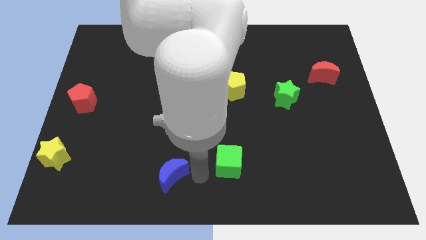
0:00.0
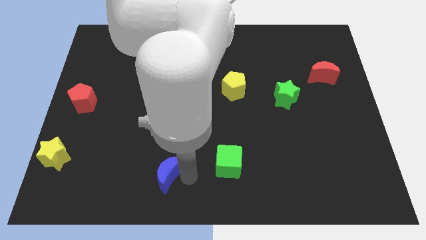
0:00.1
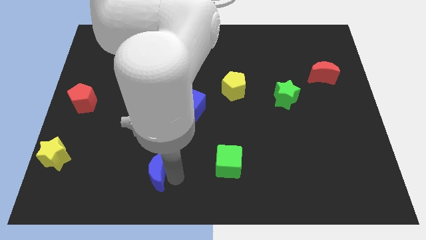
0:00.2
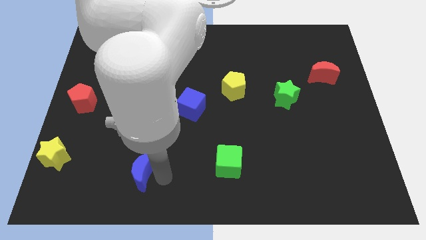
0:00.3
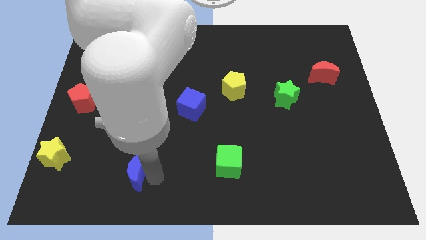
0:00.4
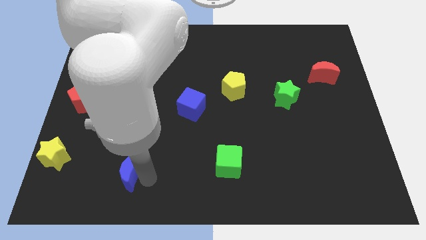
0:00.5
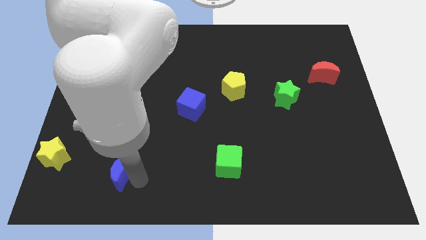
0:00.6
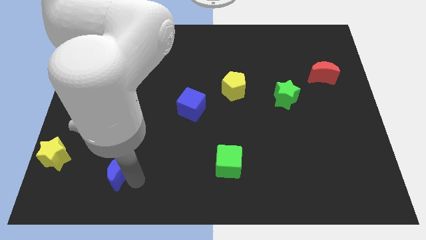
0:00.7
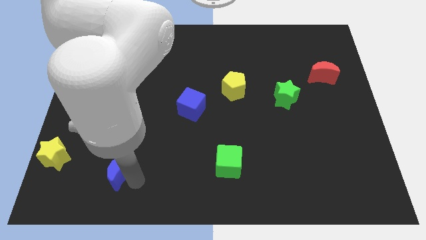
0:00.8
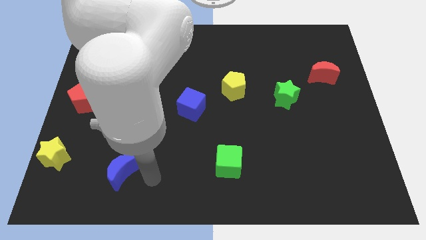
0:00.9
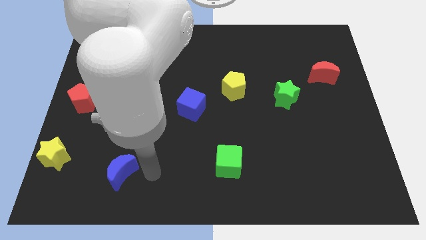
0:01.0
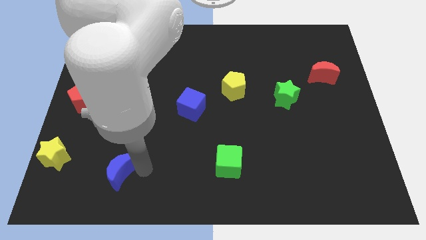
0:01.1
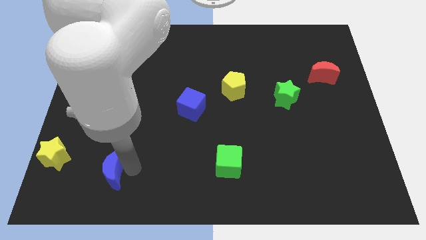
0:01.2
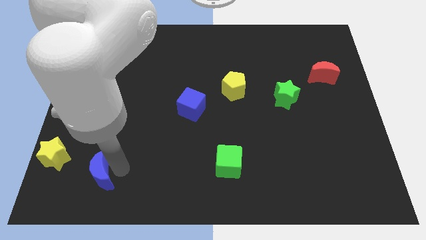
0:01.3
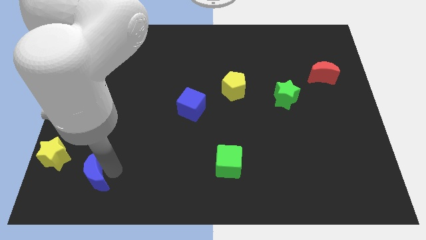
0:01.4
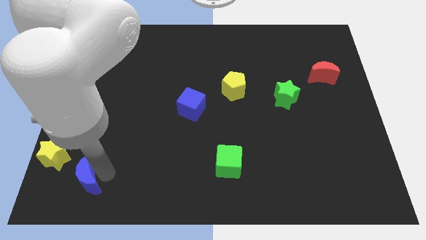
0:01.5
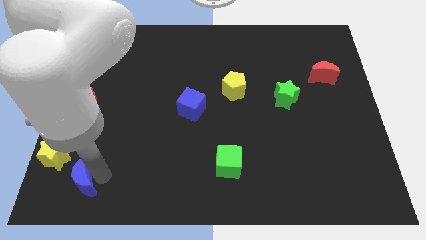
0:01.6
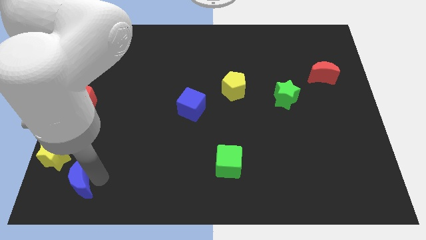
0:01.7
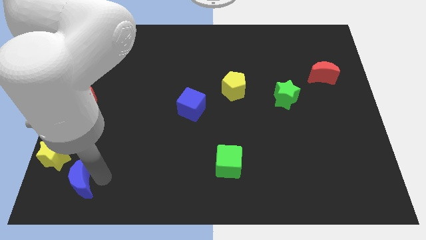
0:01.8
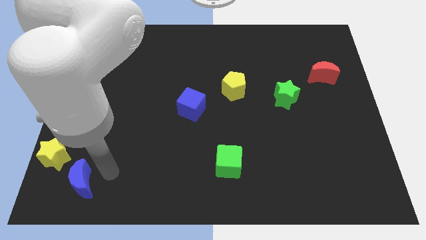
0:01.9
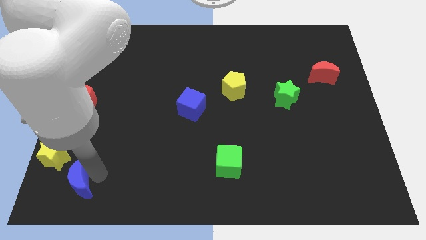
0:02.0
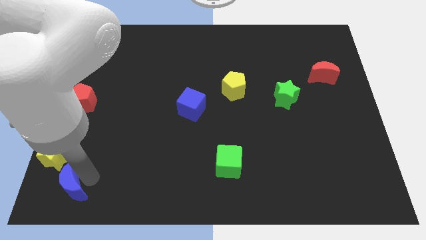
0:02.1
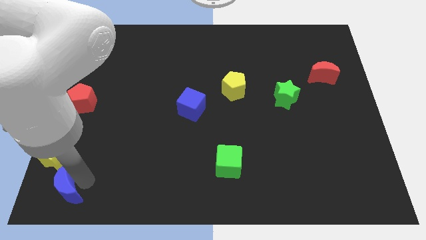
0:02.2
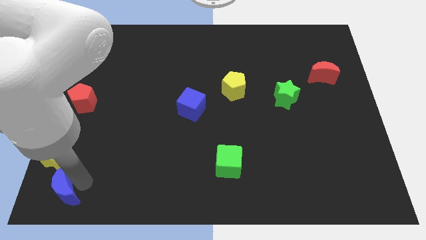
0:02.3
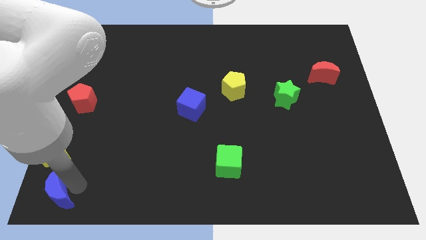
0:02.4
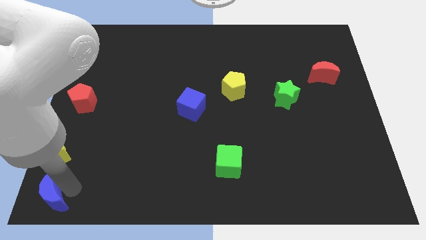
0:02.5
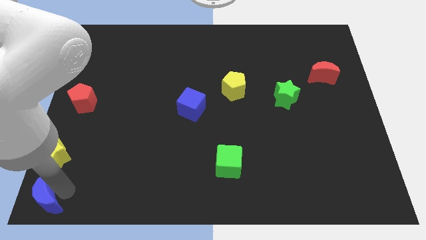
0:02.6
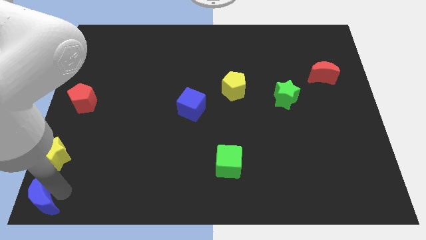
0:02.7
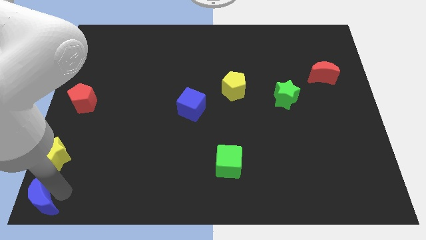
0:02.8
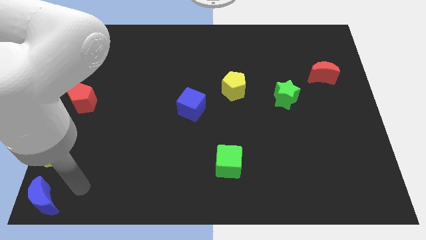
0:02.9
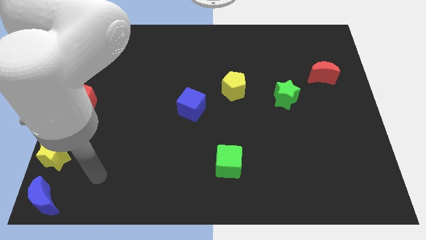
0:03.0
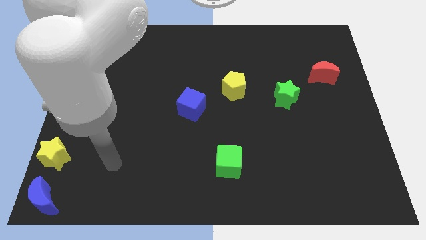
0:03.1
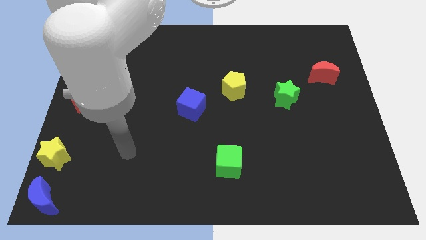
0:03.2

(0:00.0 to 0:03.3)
place the blue moon below the yellow star

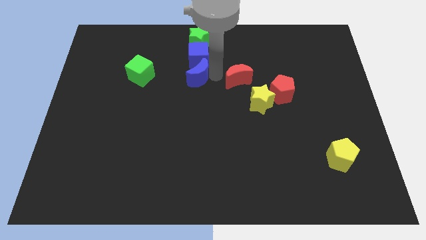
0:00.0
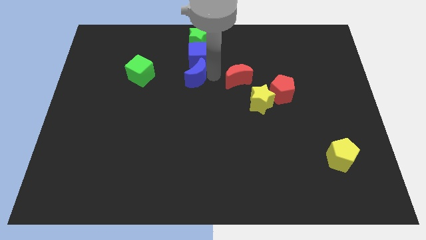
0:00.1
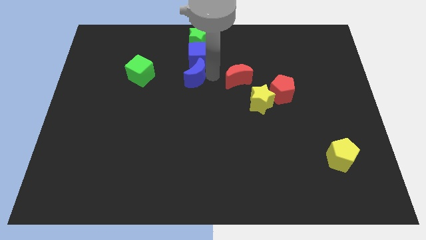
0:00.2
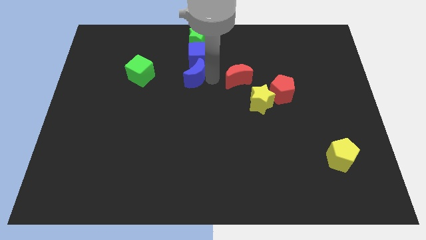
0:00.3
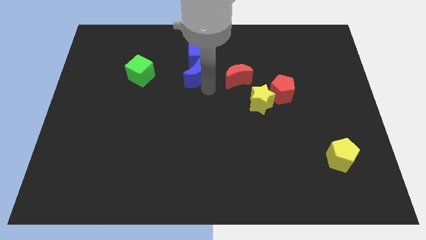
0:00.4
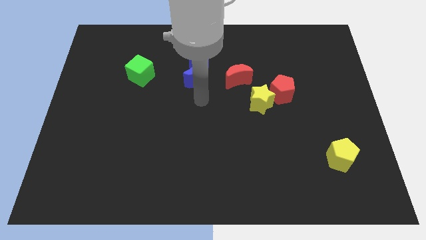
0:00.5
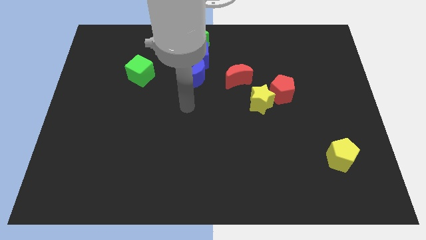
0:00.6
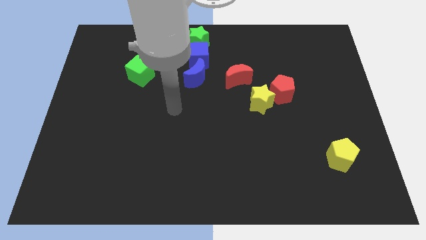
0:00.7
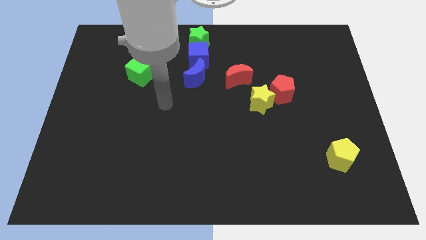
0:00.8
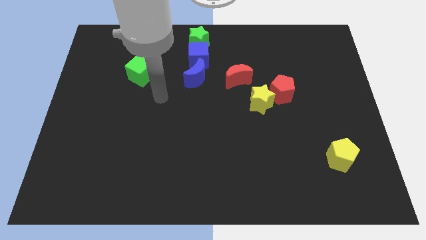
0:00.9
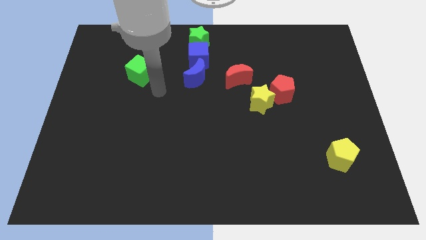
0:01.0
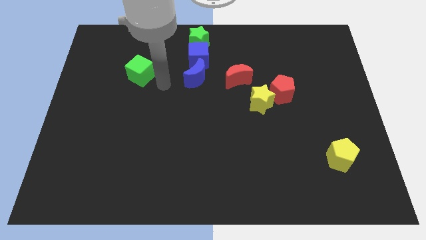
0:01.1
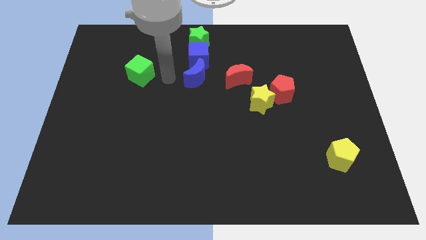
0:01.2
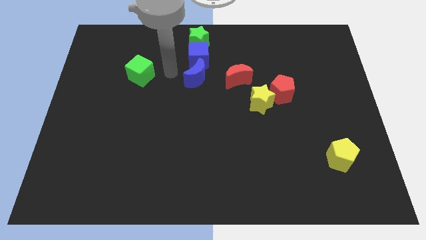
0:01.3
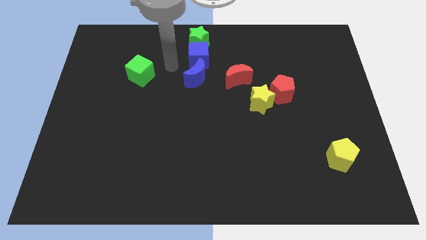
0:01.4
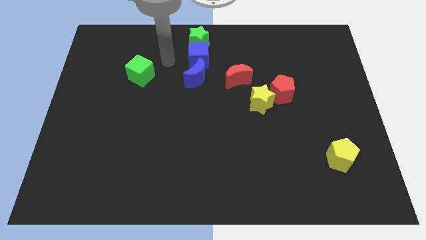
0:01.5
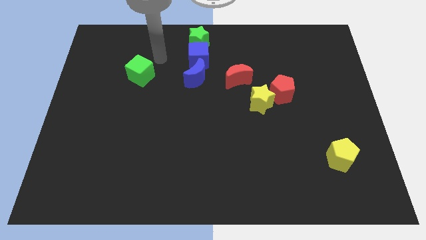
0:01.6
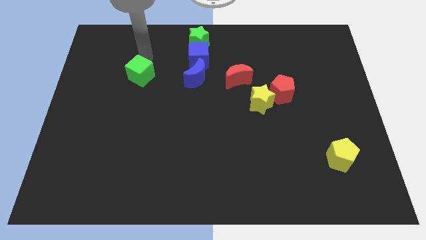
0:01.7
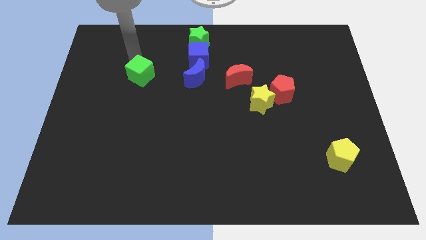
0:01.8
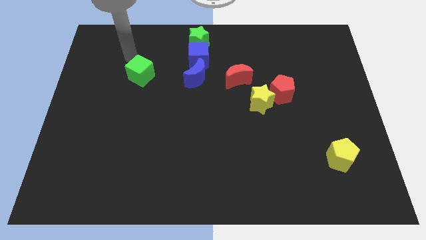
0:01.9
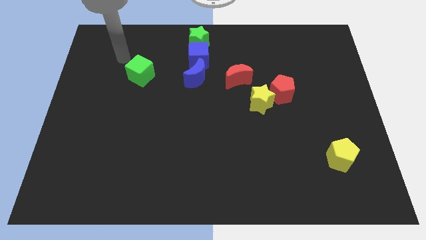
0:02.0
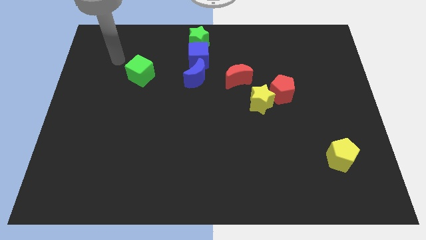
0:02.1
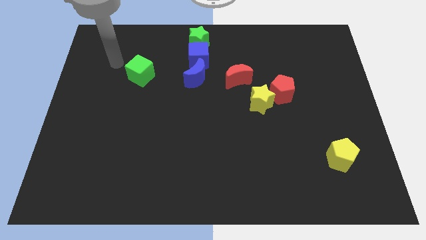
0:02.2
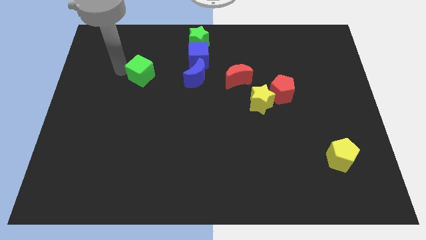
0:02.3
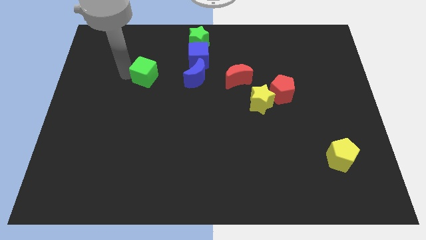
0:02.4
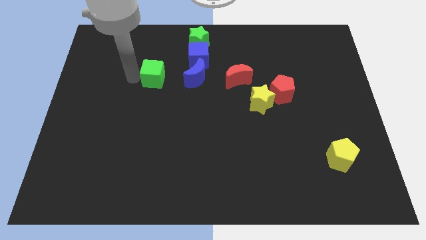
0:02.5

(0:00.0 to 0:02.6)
move arm near green cube

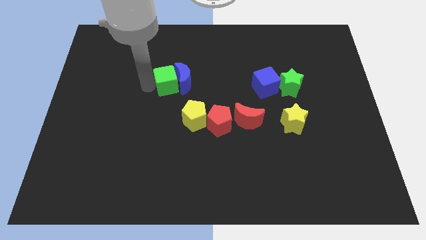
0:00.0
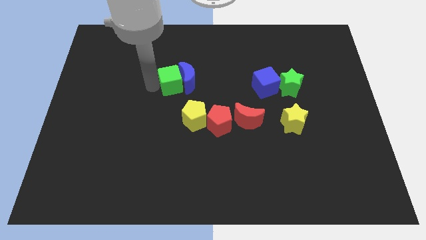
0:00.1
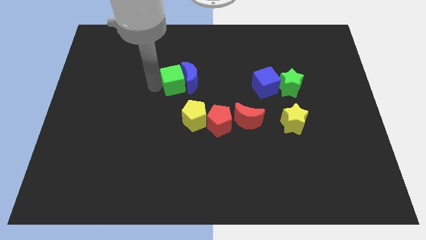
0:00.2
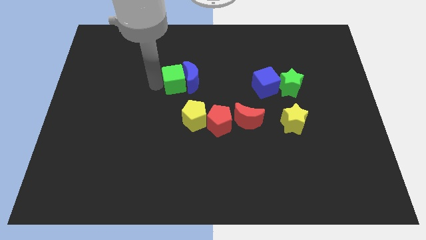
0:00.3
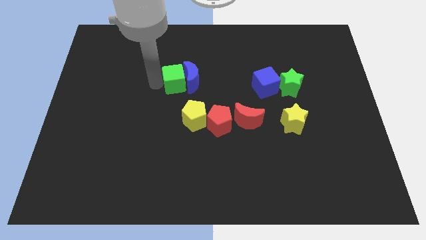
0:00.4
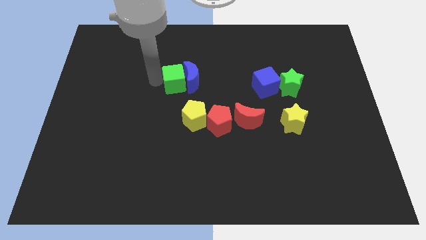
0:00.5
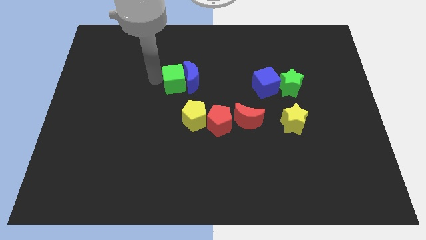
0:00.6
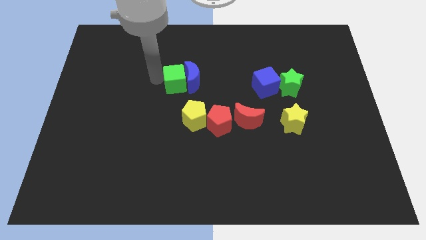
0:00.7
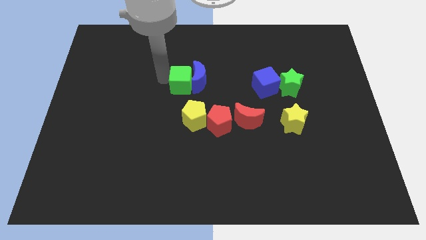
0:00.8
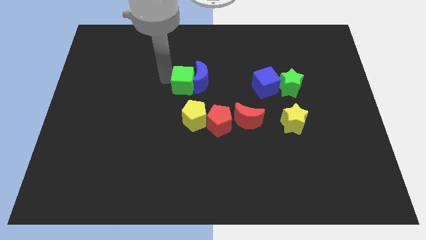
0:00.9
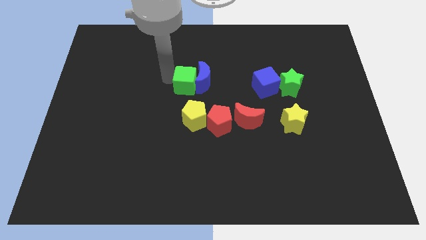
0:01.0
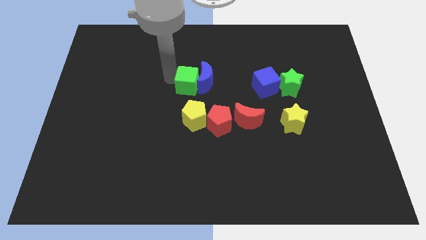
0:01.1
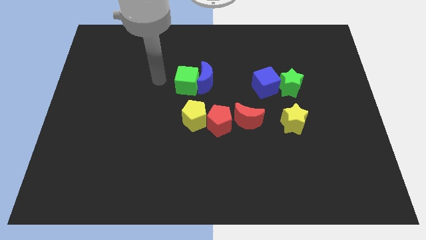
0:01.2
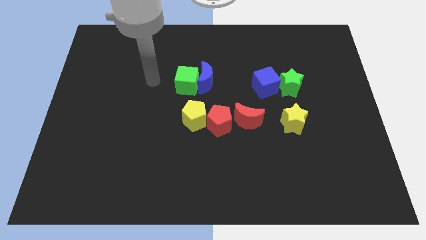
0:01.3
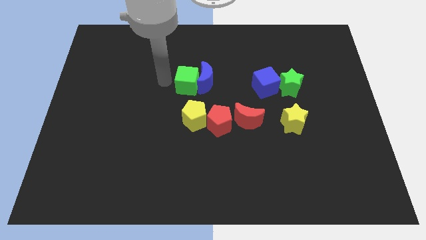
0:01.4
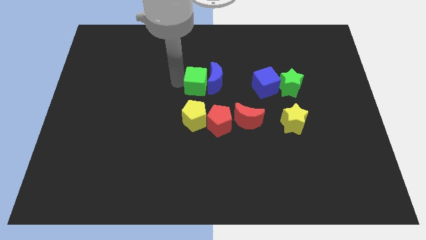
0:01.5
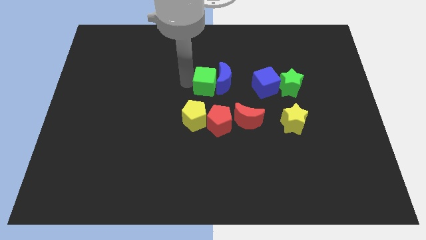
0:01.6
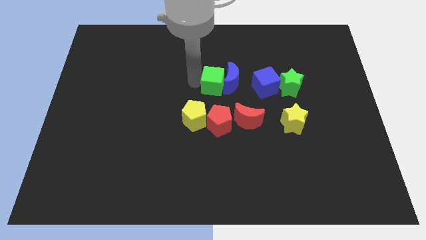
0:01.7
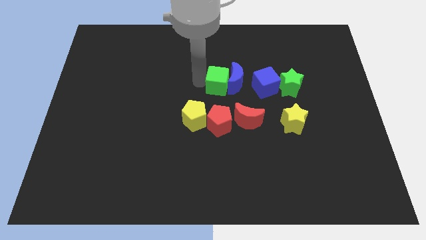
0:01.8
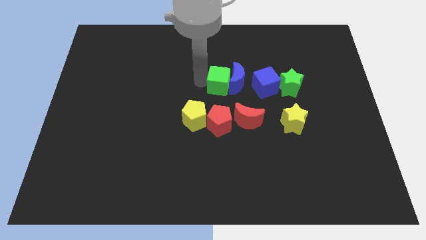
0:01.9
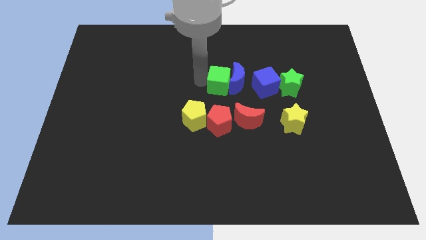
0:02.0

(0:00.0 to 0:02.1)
slide the green cube along with the blue moon towards the right

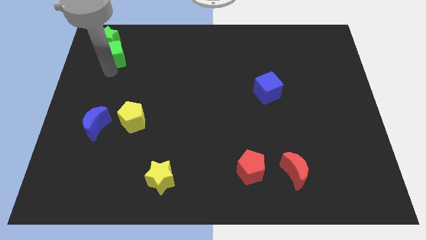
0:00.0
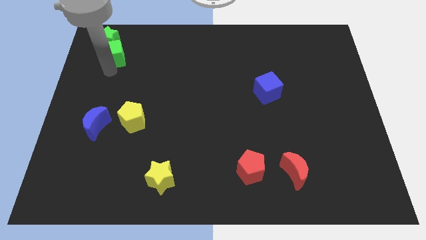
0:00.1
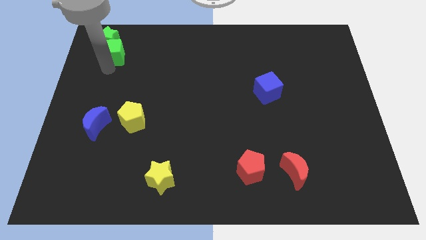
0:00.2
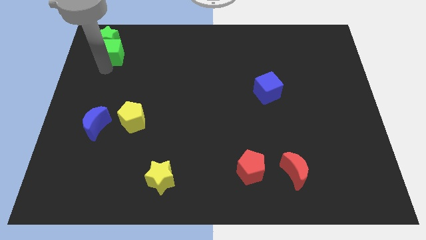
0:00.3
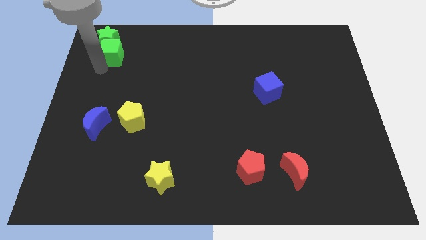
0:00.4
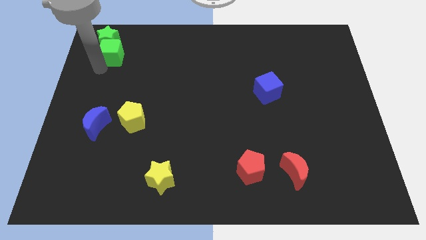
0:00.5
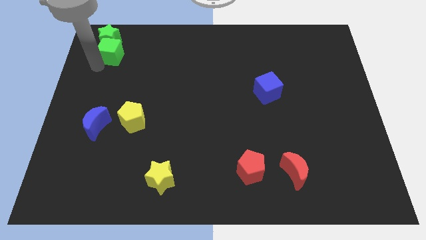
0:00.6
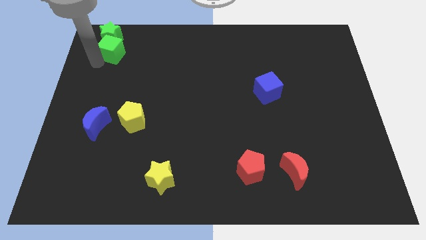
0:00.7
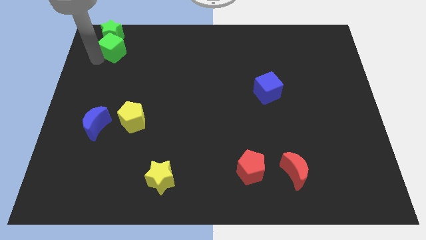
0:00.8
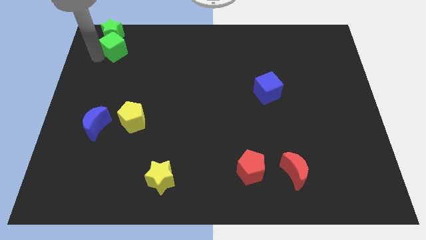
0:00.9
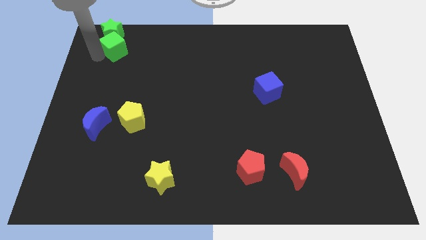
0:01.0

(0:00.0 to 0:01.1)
push green cube in to green star
